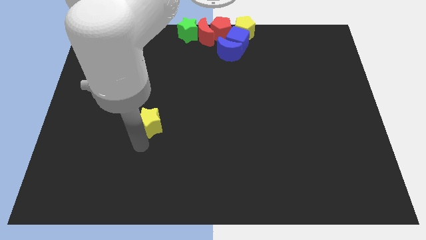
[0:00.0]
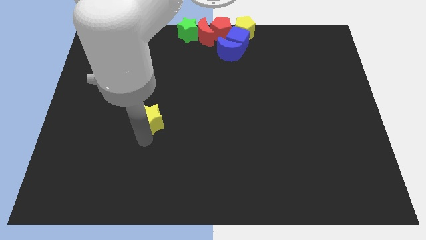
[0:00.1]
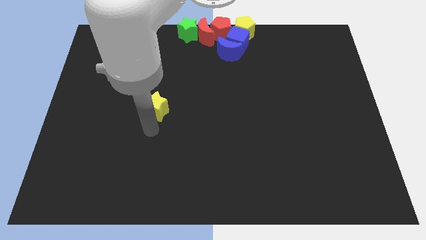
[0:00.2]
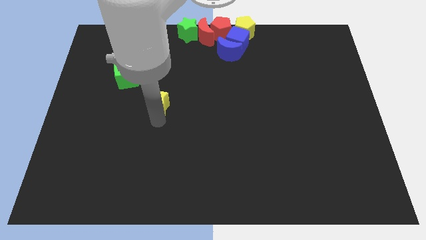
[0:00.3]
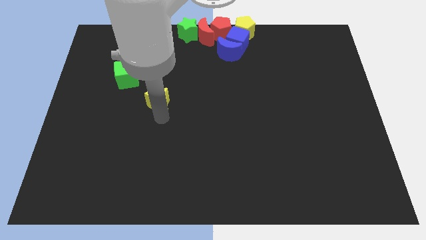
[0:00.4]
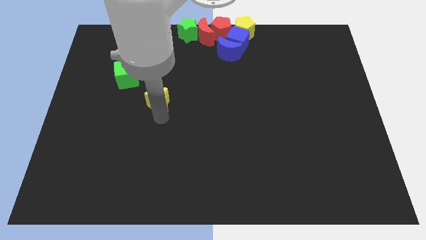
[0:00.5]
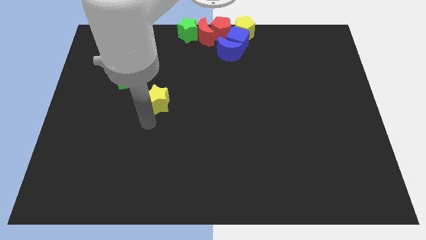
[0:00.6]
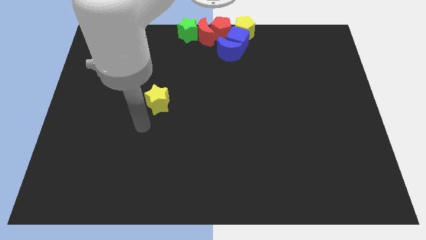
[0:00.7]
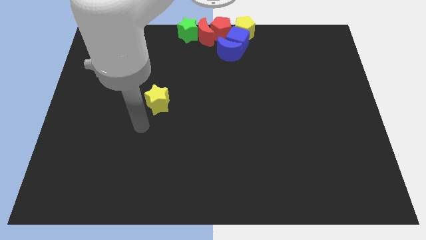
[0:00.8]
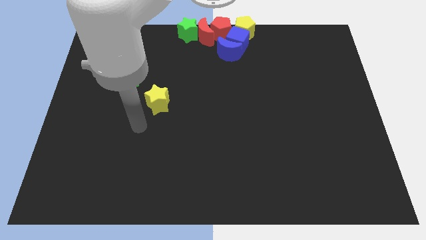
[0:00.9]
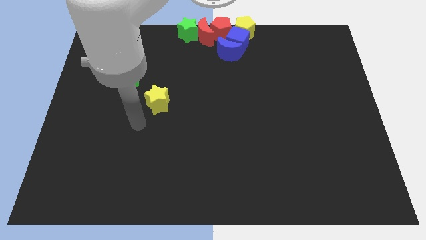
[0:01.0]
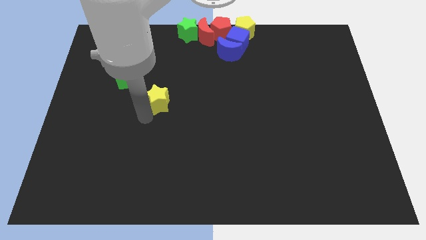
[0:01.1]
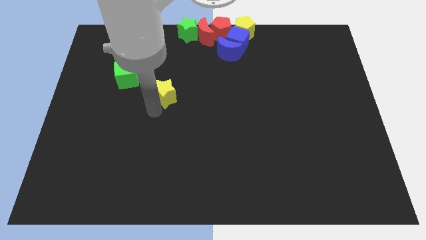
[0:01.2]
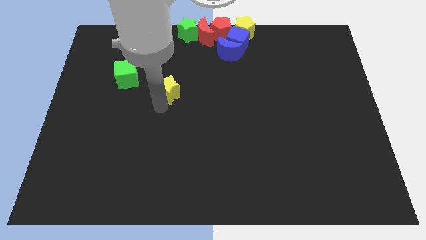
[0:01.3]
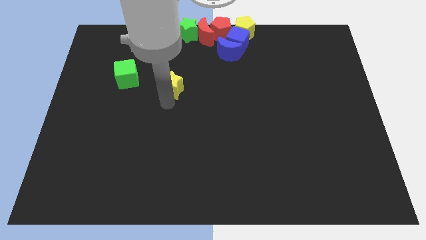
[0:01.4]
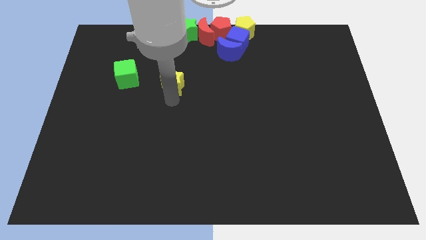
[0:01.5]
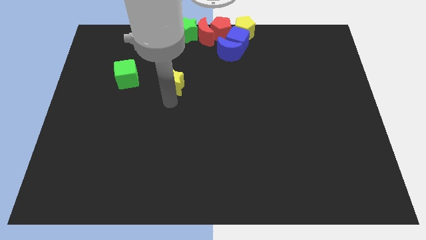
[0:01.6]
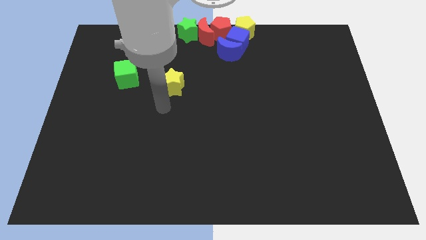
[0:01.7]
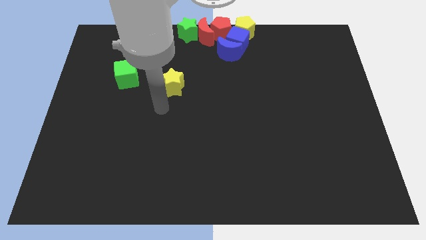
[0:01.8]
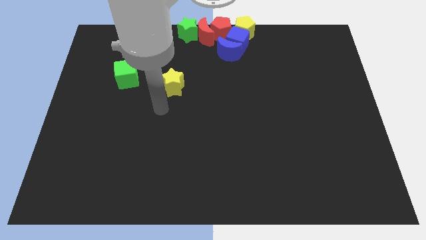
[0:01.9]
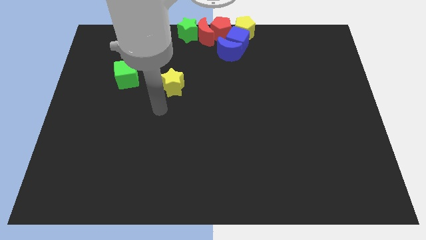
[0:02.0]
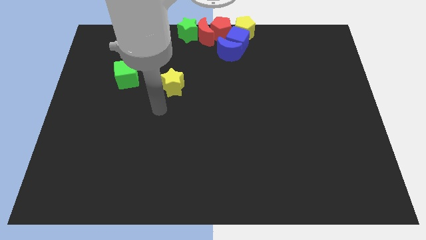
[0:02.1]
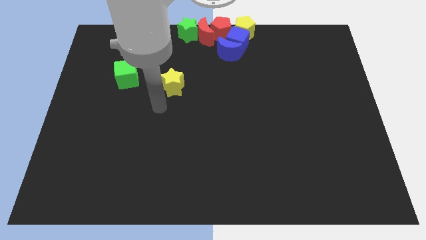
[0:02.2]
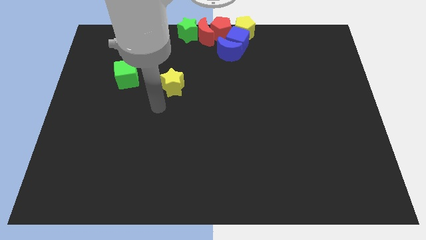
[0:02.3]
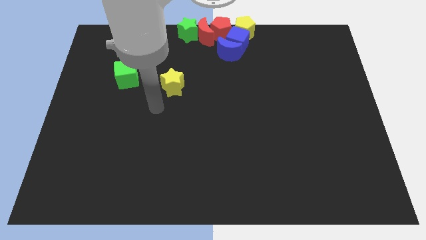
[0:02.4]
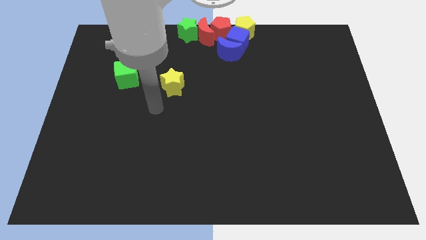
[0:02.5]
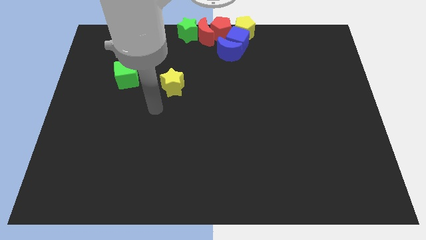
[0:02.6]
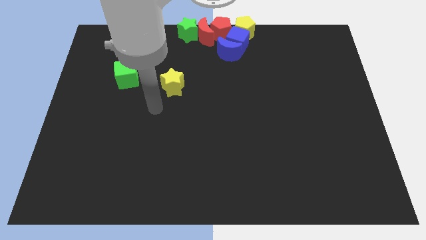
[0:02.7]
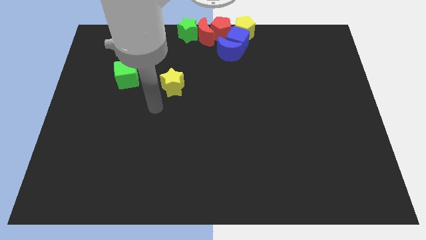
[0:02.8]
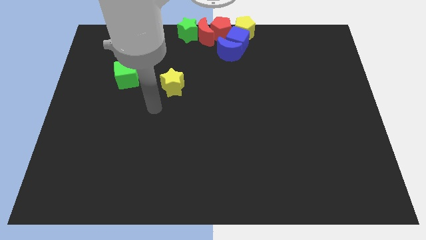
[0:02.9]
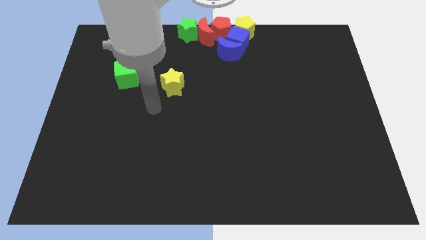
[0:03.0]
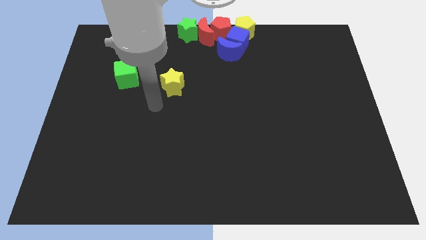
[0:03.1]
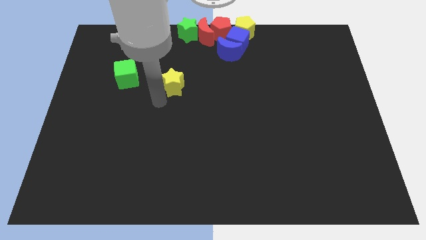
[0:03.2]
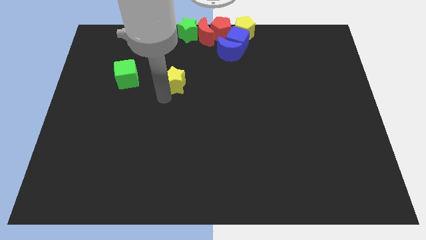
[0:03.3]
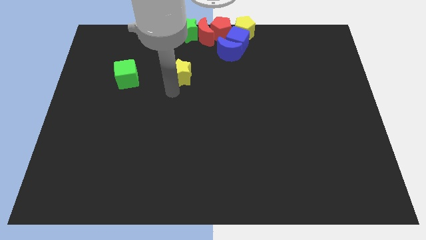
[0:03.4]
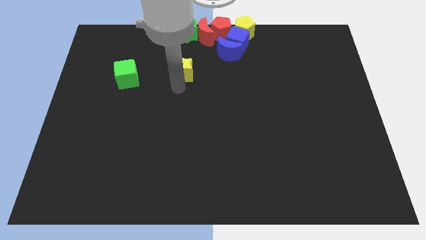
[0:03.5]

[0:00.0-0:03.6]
move the yellow star parallel right to the green cube

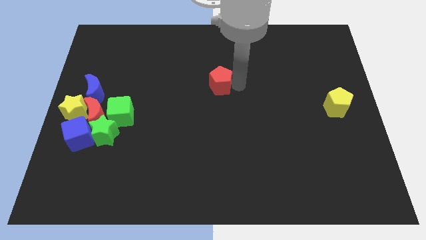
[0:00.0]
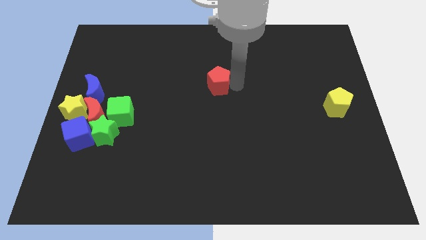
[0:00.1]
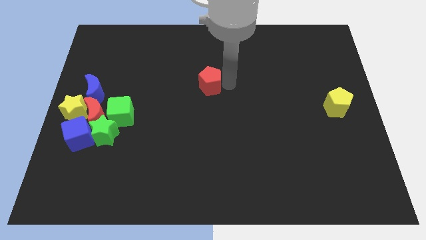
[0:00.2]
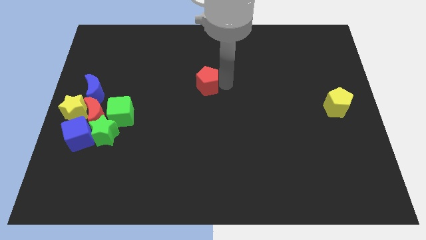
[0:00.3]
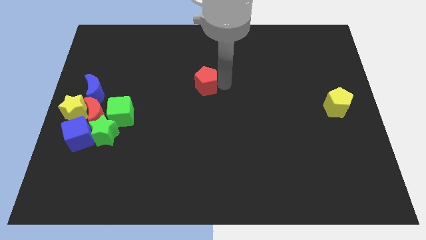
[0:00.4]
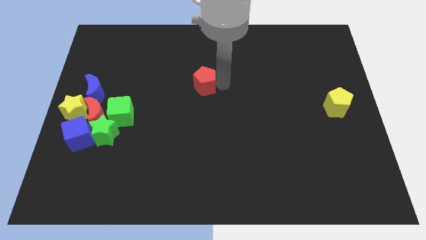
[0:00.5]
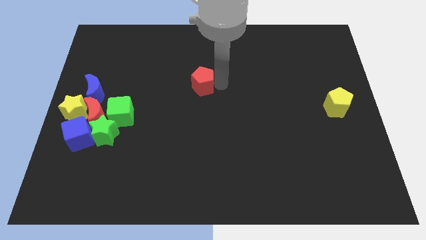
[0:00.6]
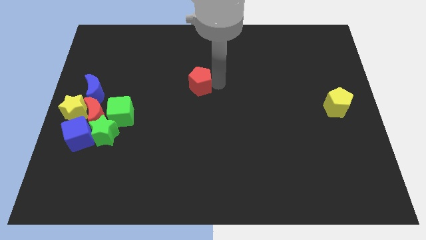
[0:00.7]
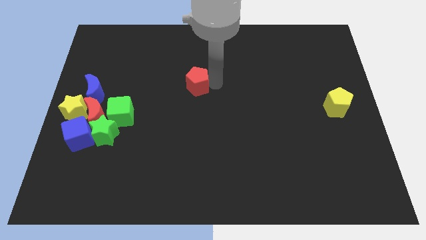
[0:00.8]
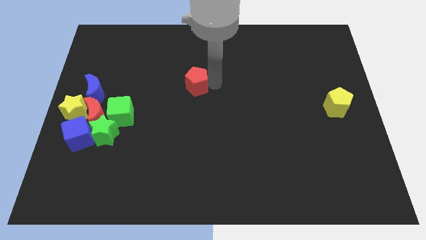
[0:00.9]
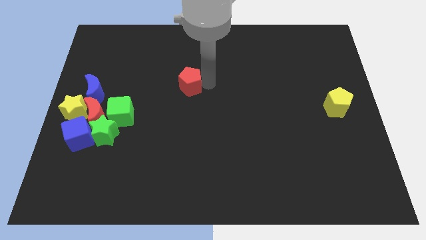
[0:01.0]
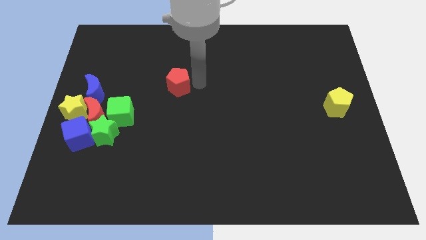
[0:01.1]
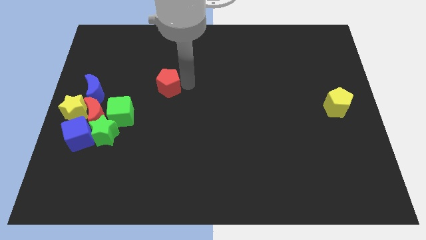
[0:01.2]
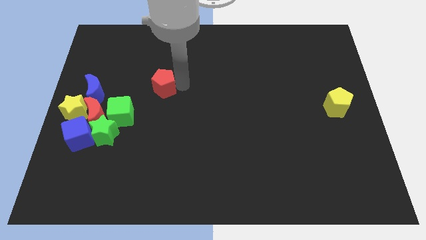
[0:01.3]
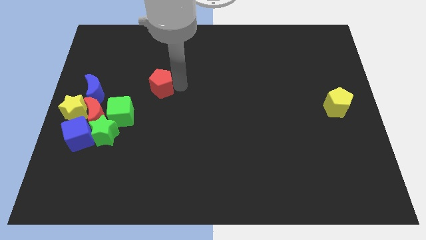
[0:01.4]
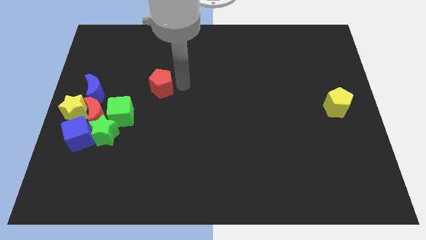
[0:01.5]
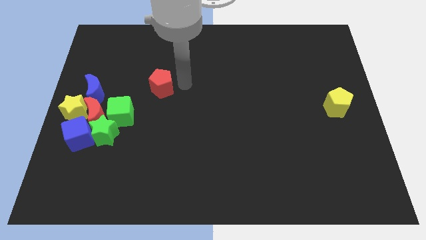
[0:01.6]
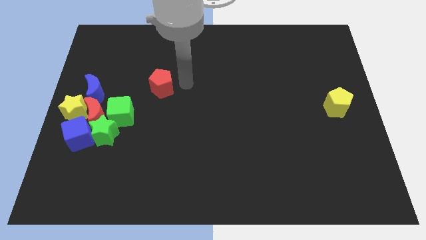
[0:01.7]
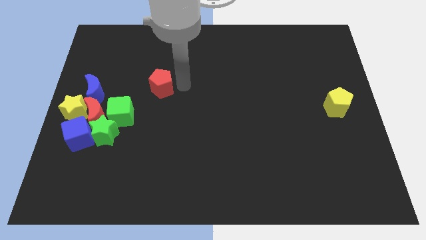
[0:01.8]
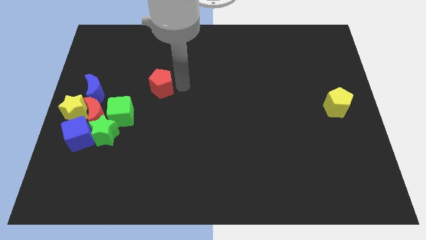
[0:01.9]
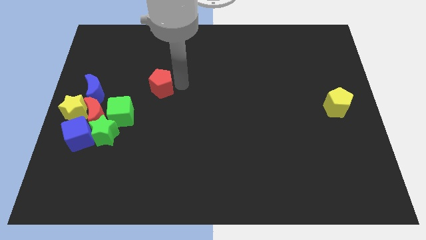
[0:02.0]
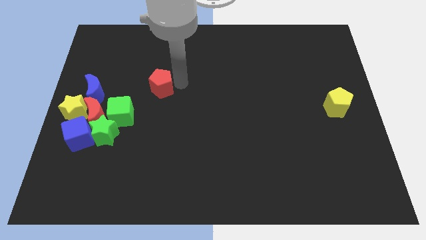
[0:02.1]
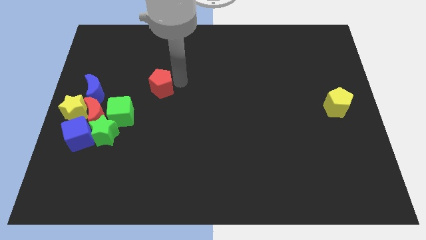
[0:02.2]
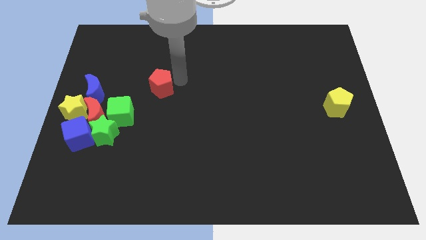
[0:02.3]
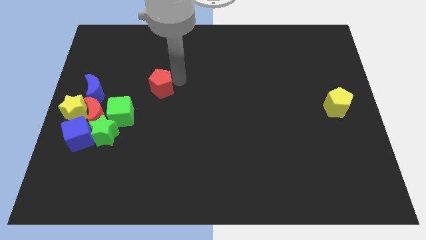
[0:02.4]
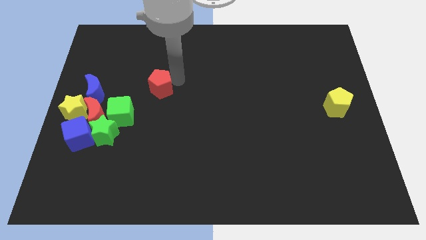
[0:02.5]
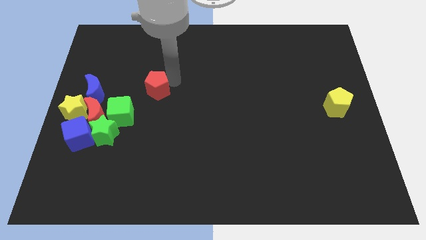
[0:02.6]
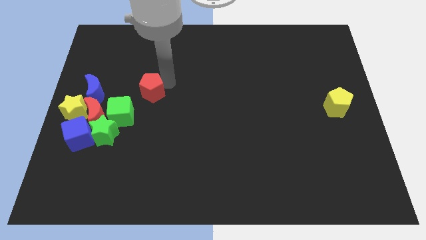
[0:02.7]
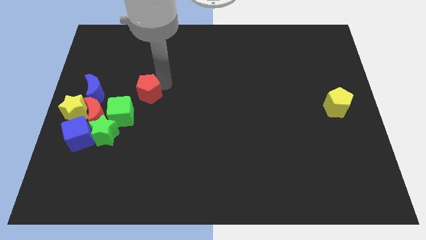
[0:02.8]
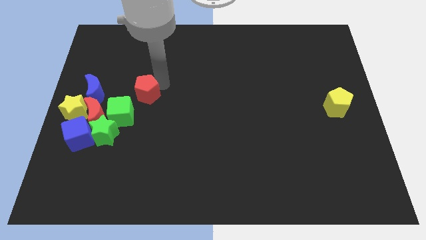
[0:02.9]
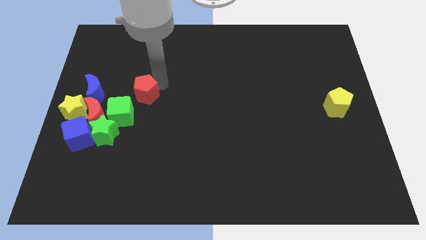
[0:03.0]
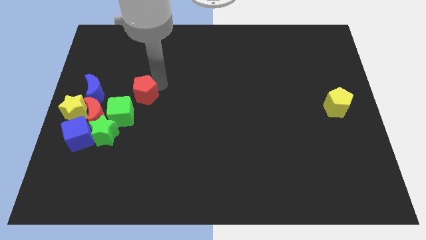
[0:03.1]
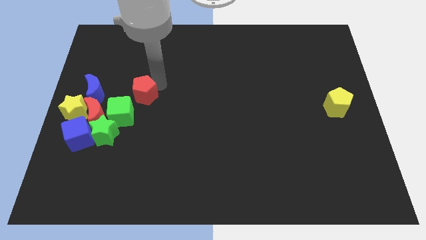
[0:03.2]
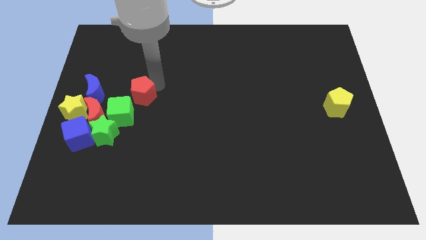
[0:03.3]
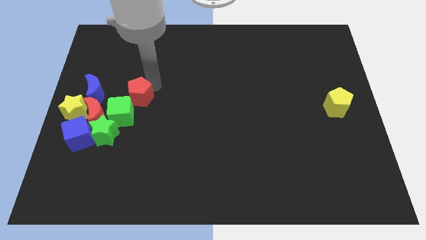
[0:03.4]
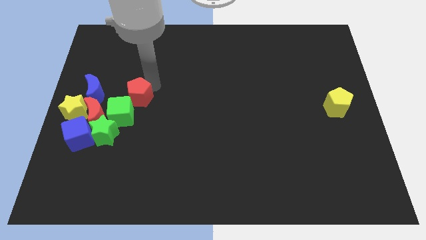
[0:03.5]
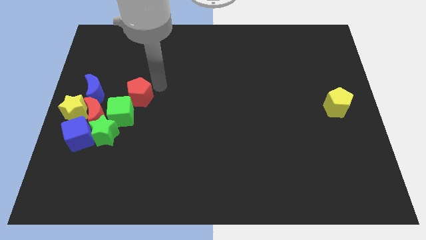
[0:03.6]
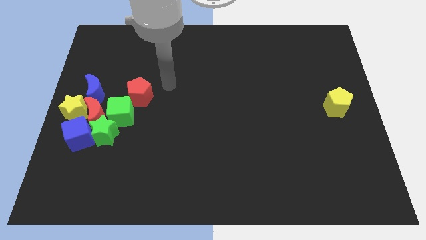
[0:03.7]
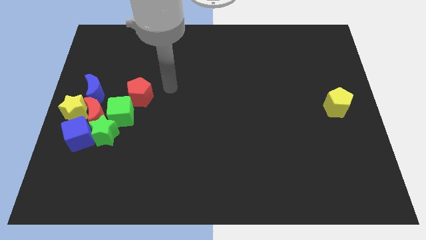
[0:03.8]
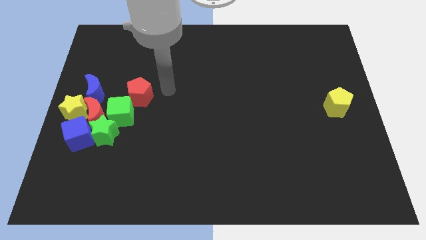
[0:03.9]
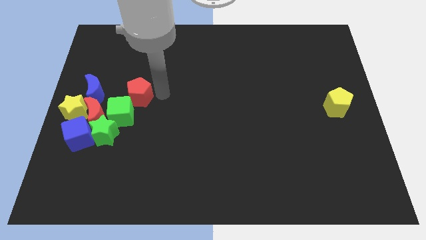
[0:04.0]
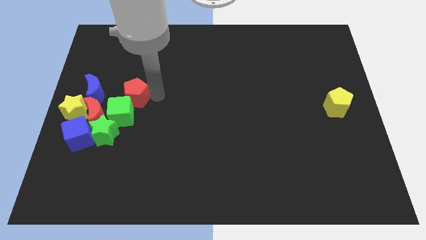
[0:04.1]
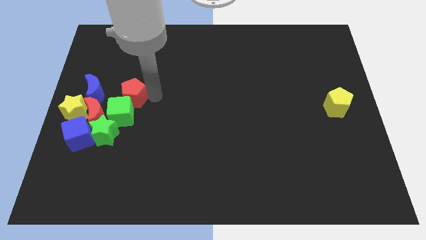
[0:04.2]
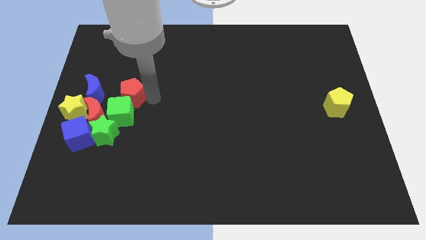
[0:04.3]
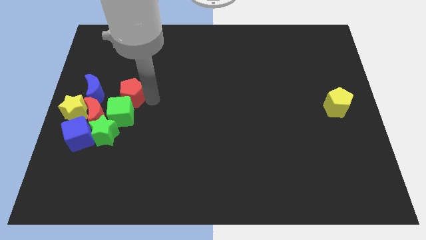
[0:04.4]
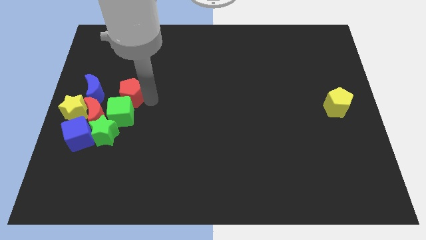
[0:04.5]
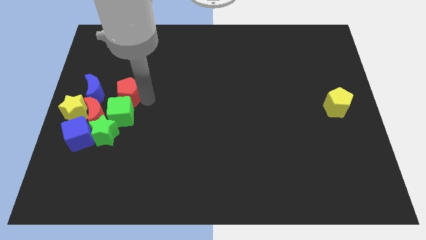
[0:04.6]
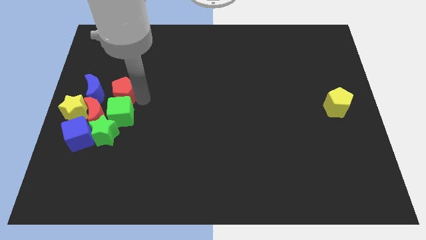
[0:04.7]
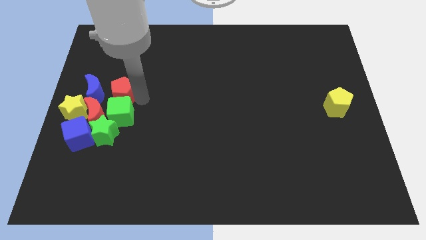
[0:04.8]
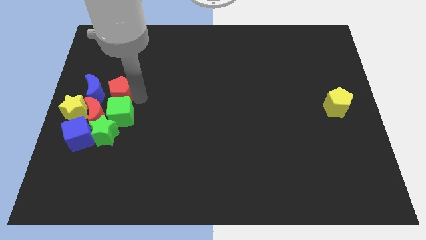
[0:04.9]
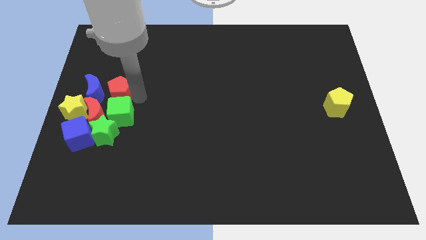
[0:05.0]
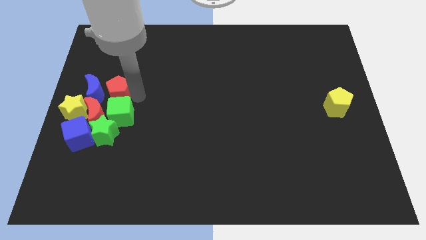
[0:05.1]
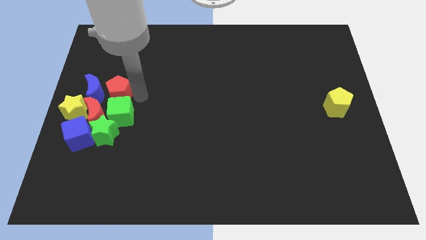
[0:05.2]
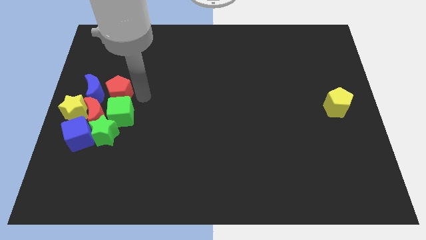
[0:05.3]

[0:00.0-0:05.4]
place the red pentagon on the top of the green cube

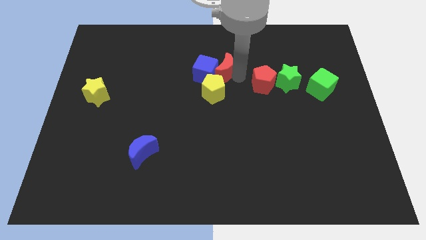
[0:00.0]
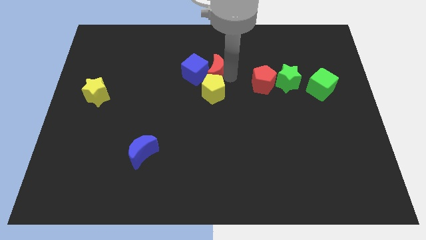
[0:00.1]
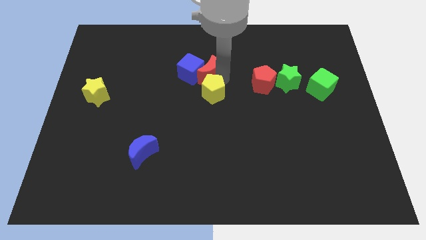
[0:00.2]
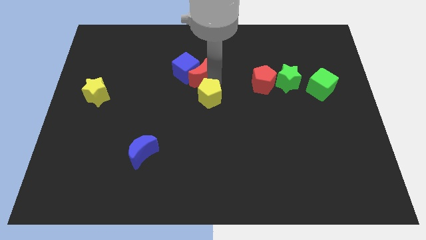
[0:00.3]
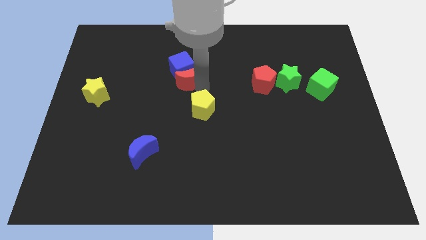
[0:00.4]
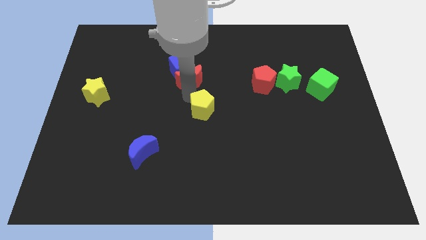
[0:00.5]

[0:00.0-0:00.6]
place your arm between red crescent and yellow pentagon
